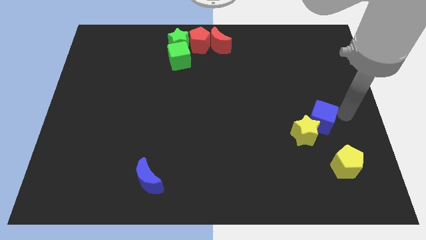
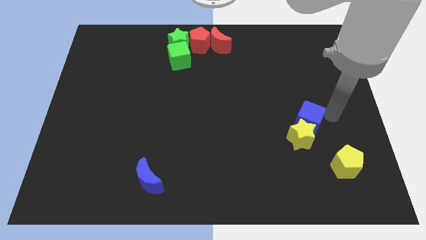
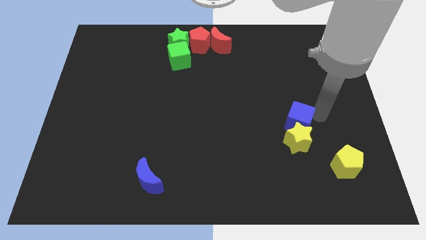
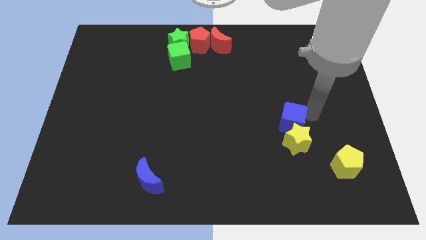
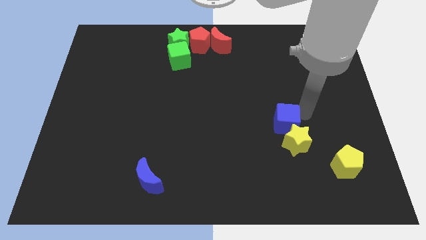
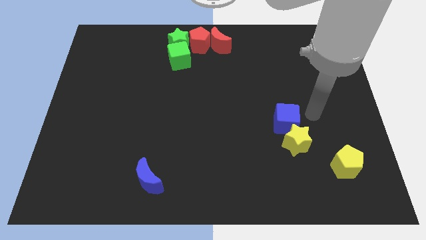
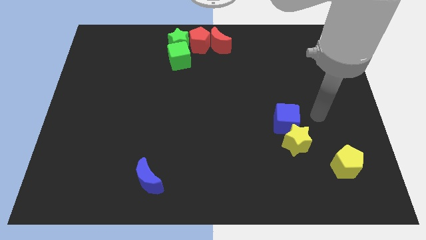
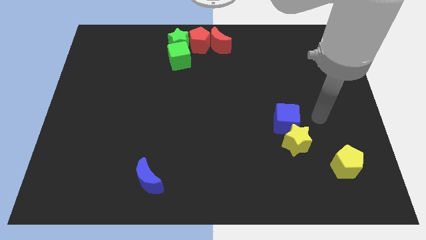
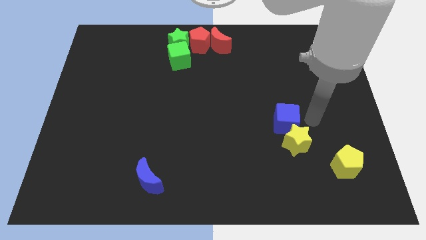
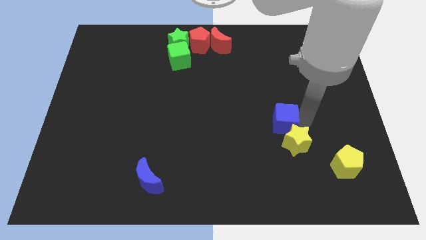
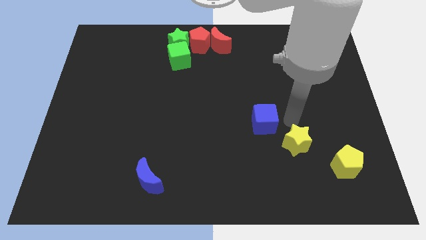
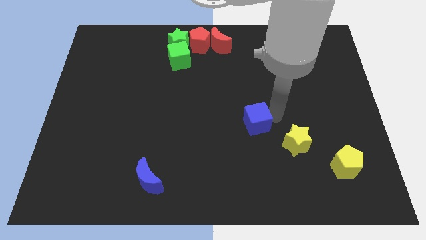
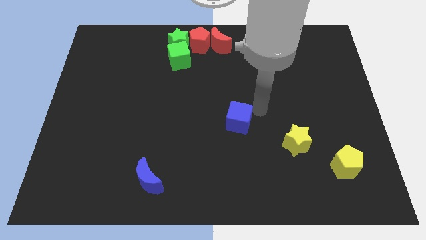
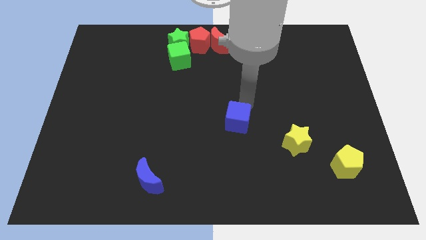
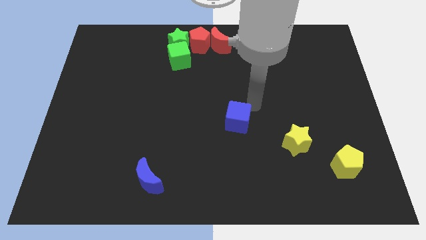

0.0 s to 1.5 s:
move the blue cube slightly left to the yellow star

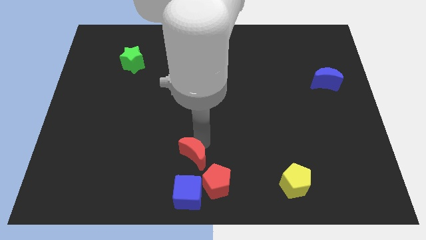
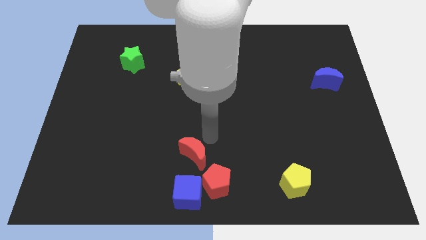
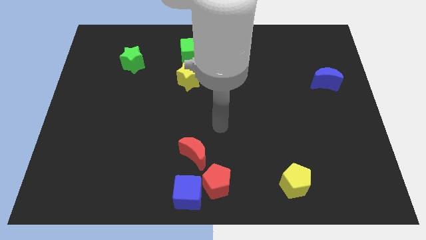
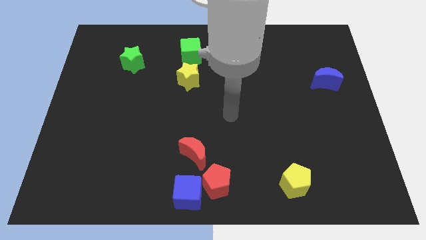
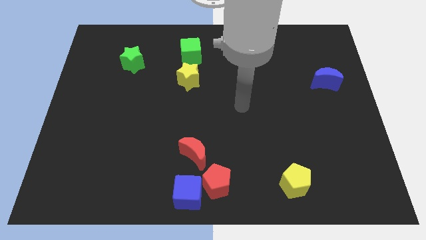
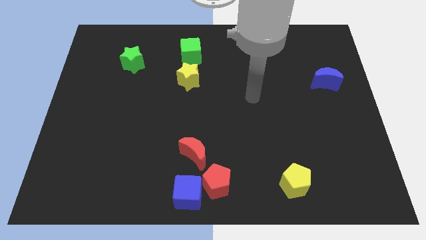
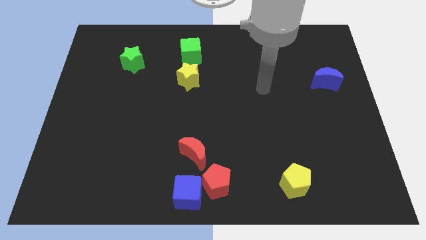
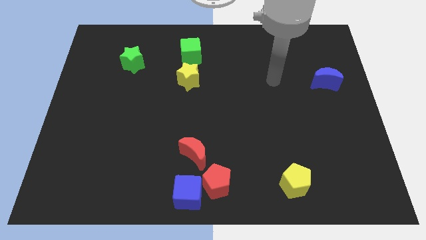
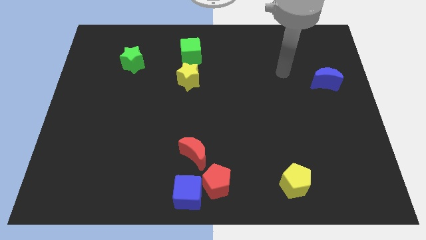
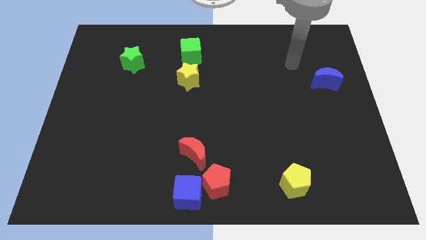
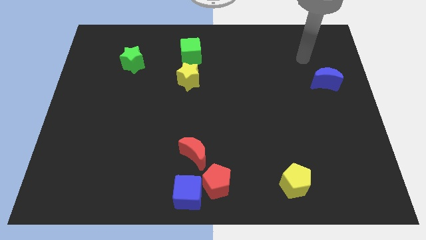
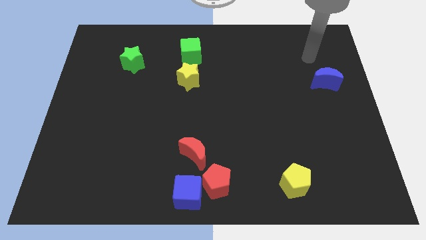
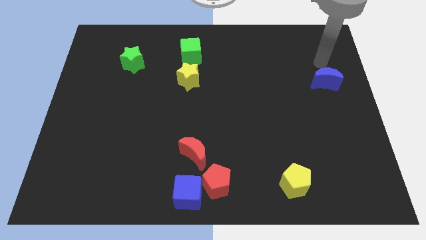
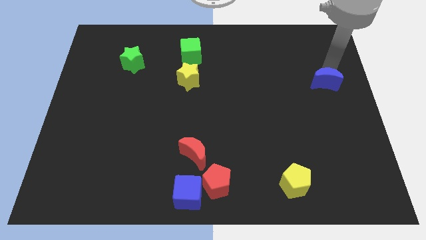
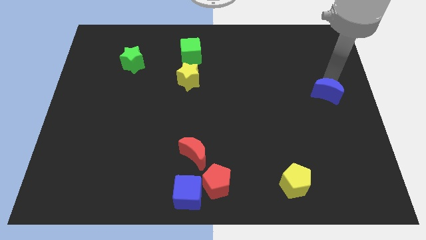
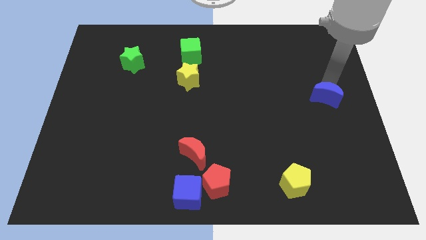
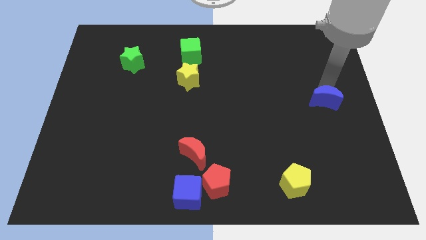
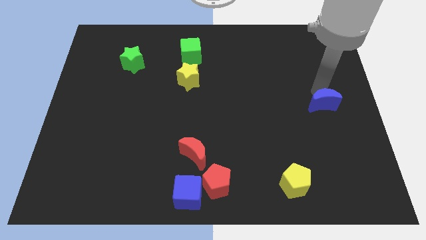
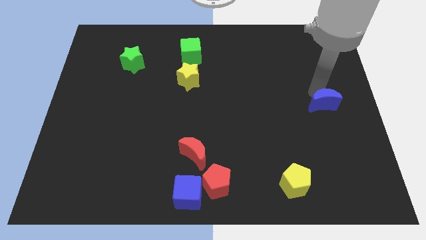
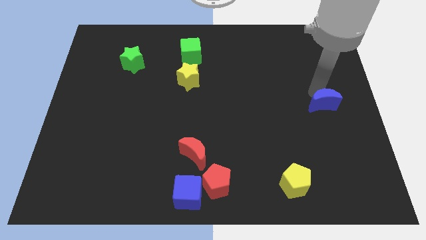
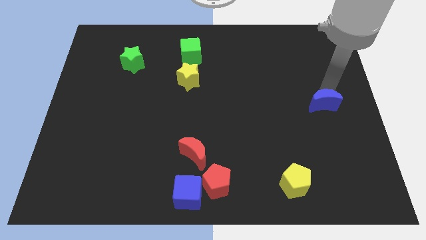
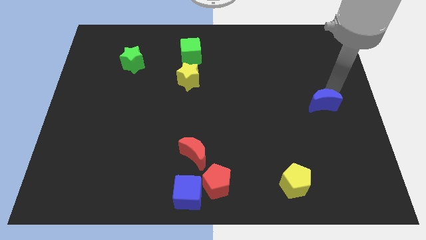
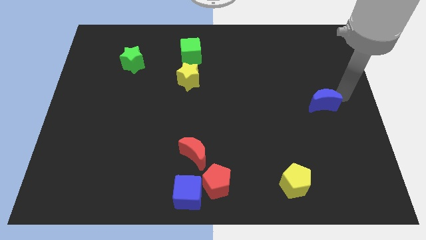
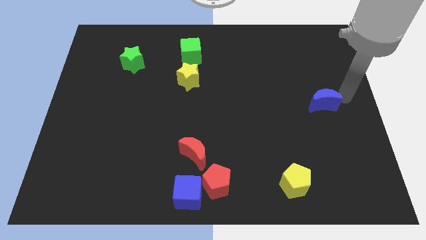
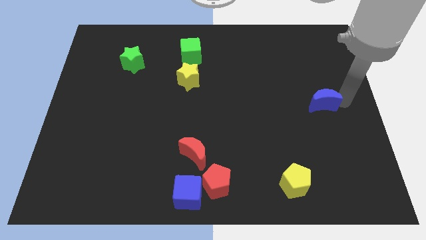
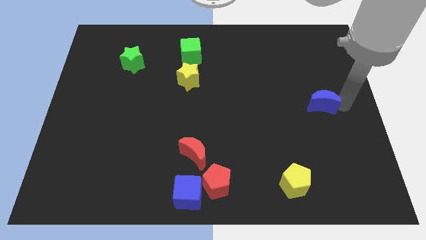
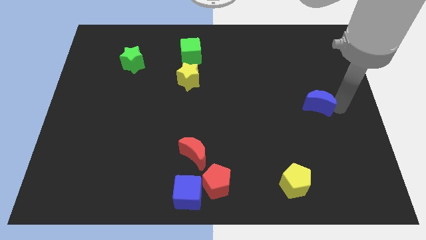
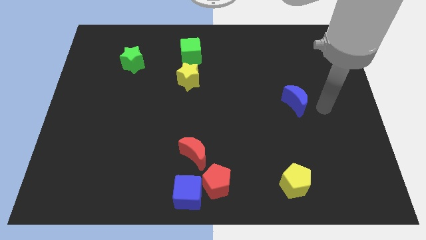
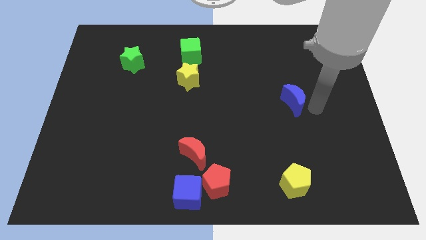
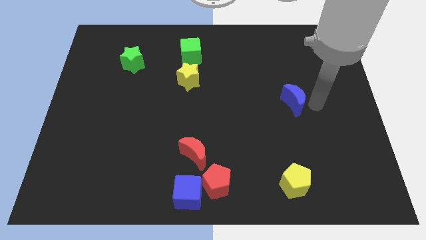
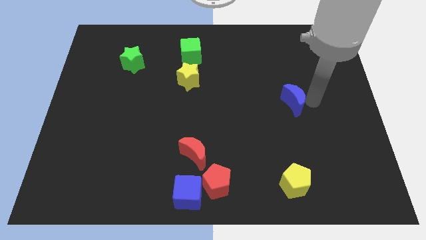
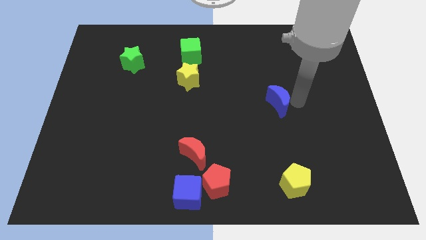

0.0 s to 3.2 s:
place the blue crescent vertically above the yellow pentagon

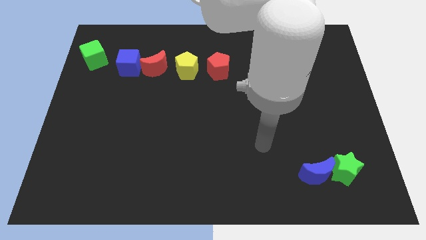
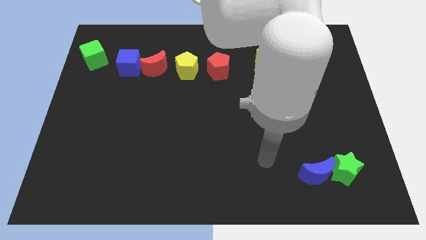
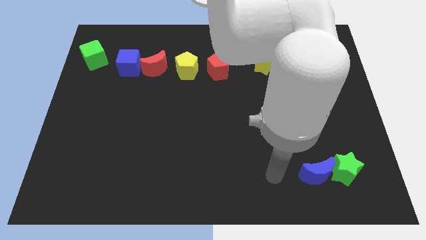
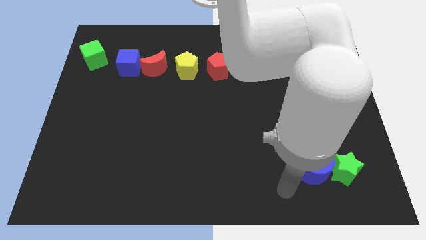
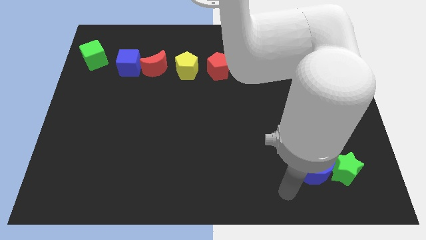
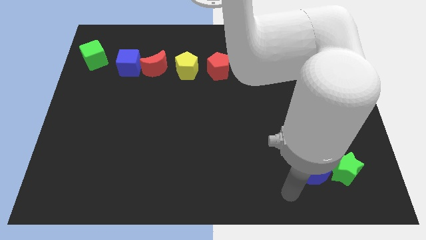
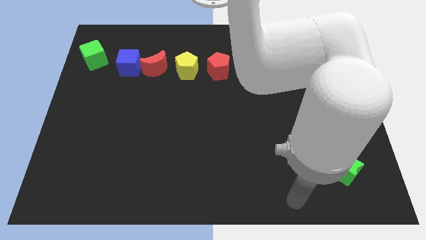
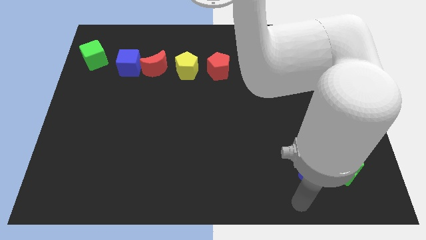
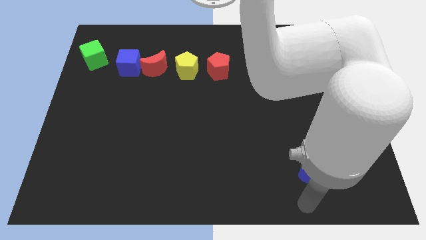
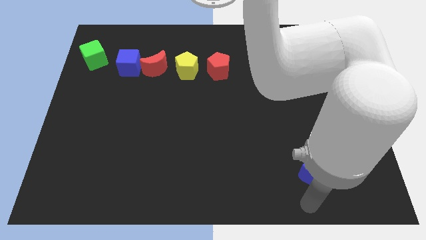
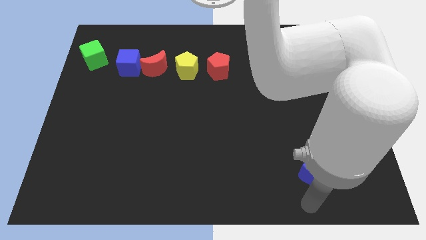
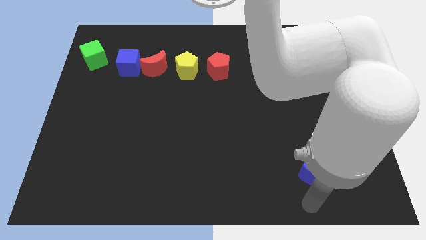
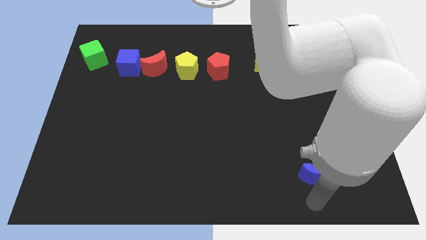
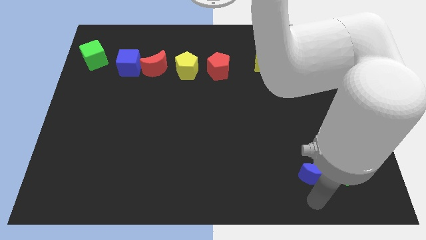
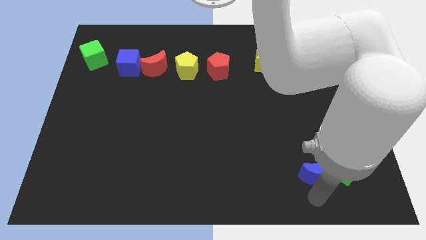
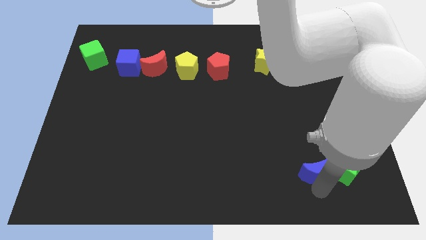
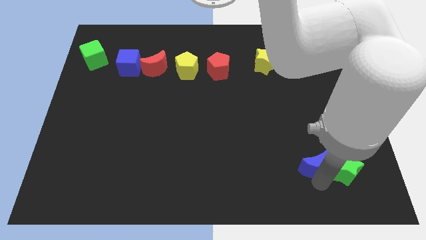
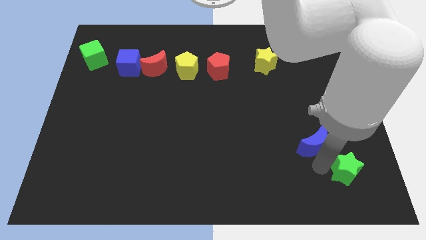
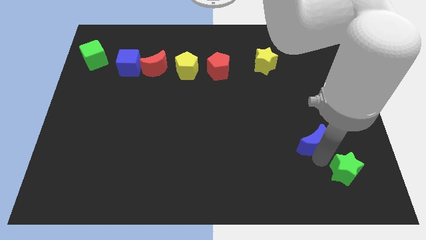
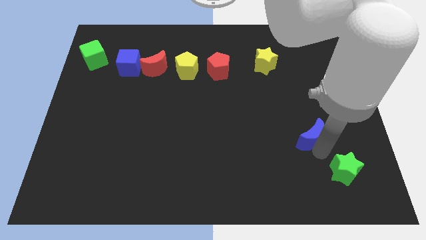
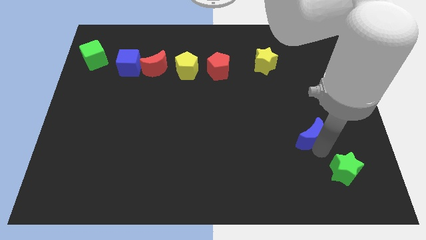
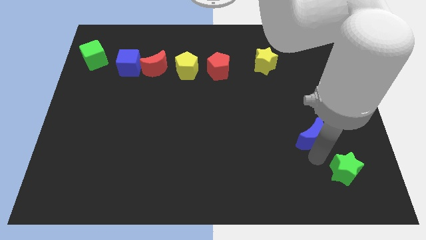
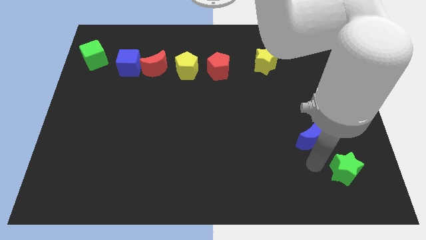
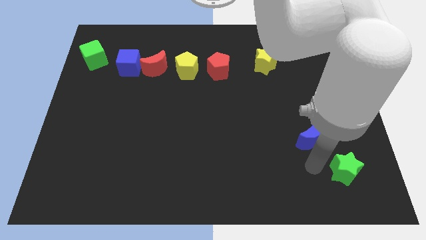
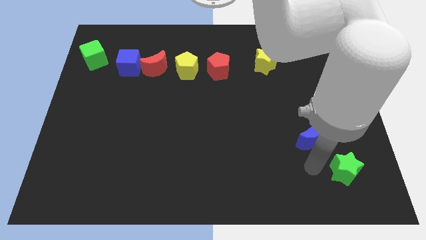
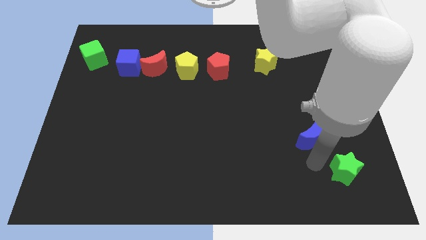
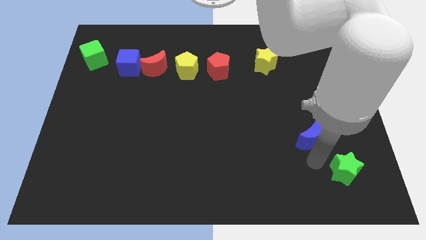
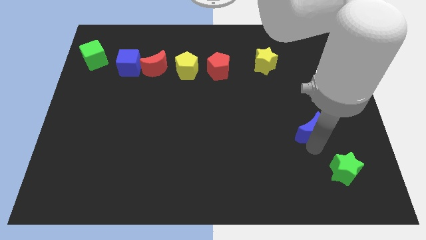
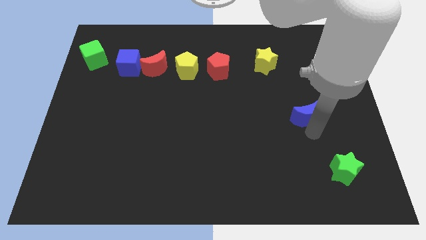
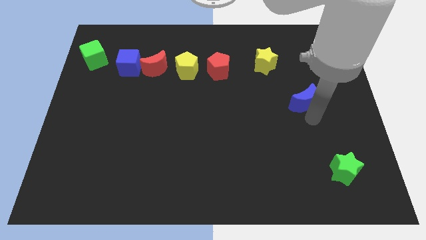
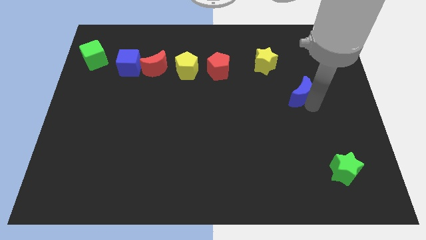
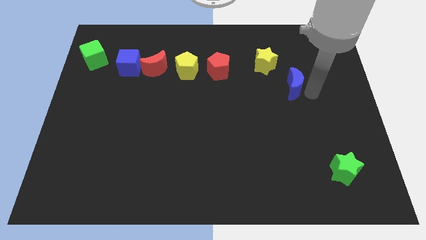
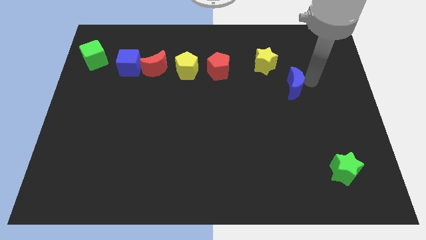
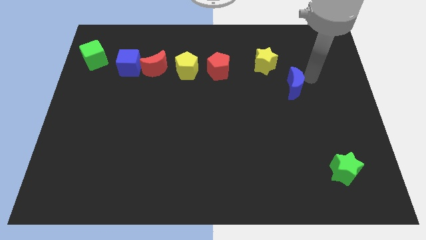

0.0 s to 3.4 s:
separate blue moon and green star

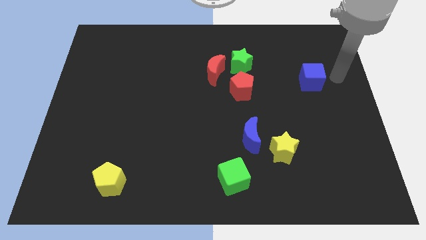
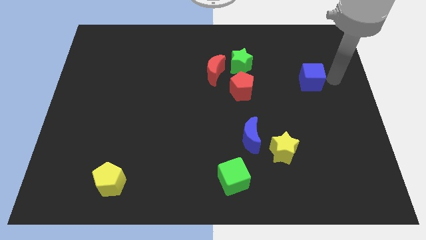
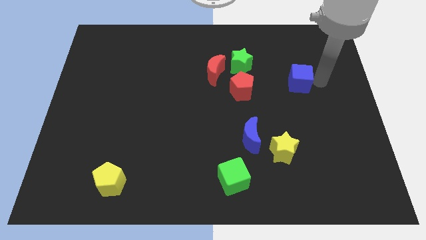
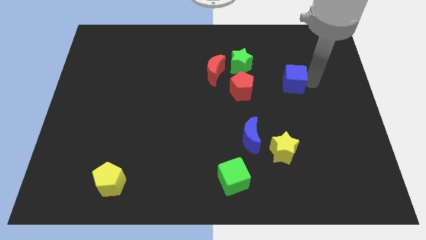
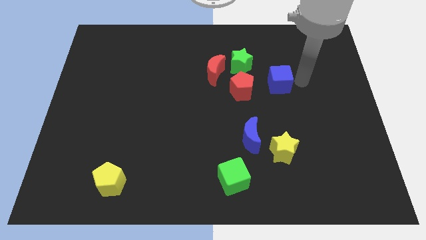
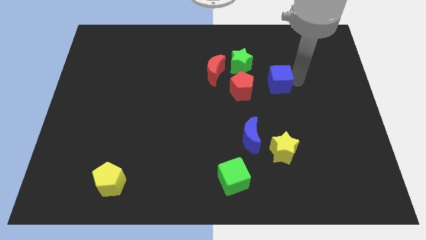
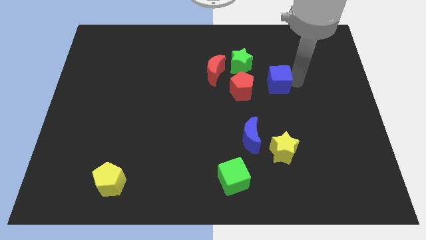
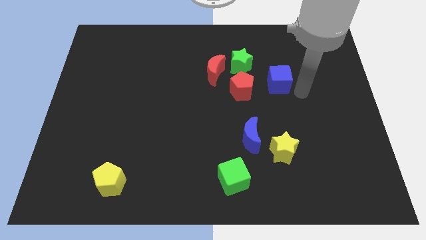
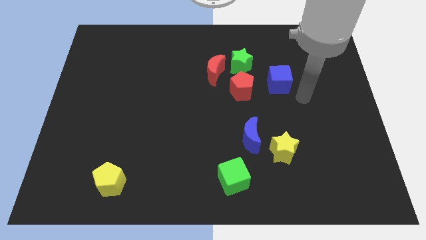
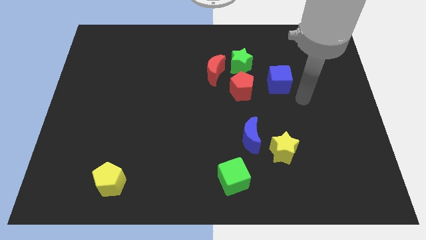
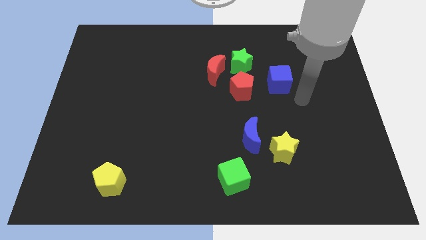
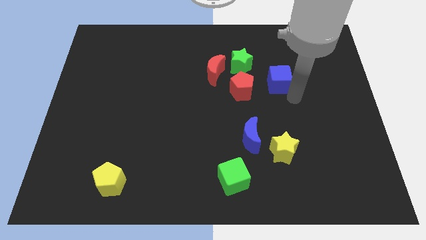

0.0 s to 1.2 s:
put the blue cube on the right side of the red pentagon
